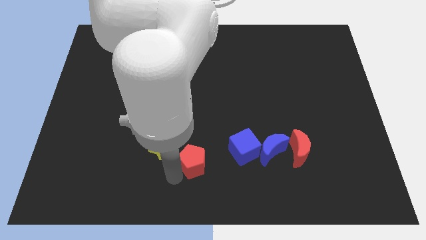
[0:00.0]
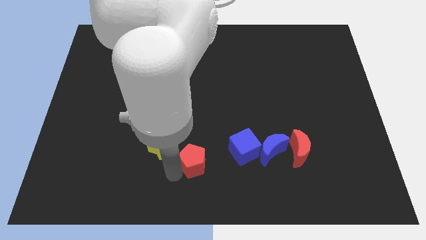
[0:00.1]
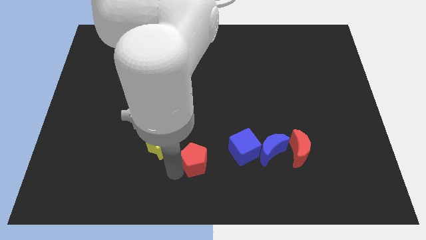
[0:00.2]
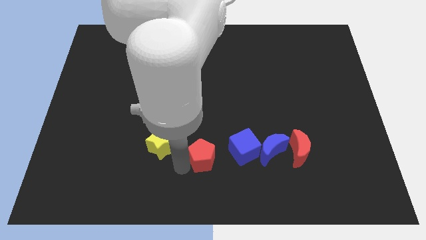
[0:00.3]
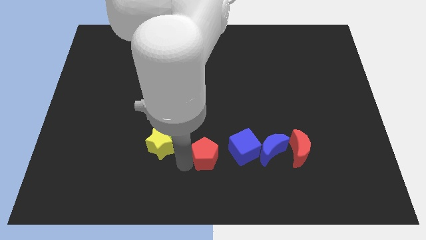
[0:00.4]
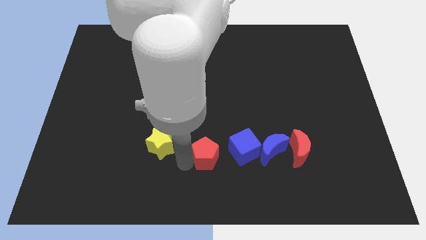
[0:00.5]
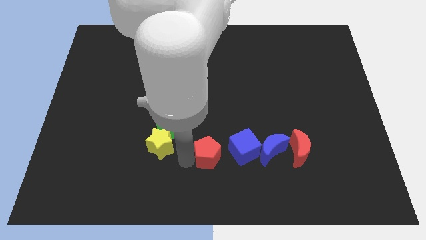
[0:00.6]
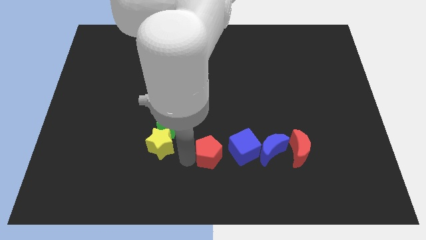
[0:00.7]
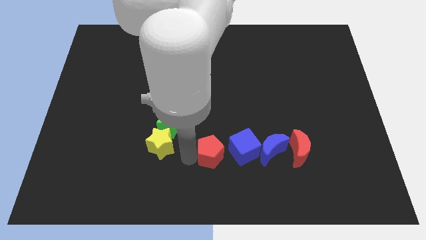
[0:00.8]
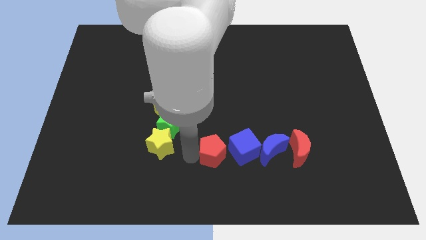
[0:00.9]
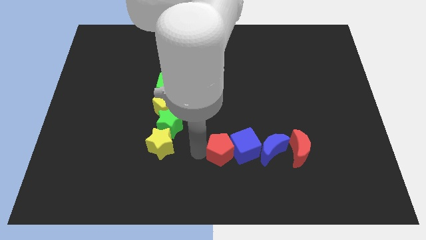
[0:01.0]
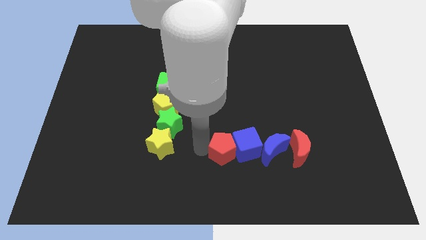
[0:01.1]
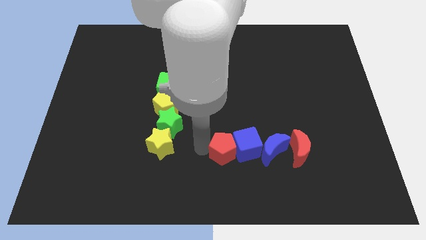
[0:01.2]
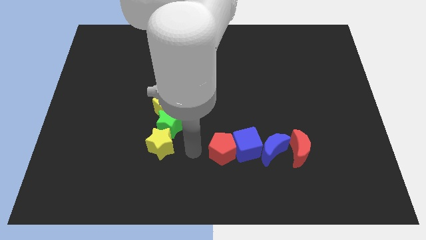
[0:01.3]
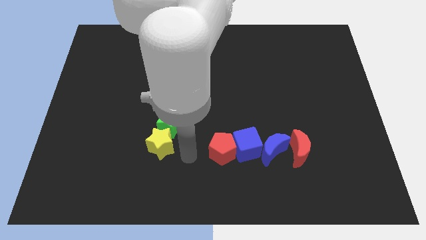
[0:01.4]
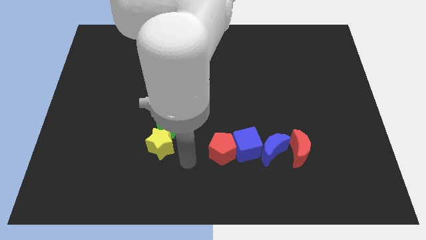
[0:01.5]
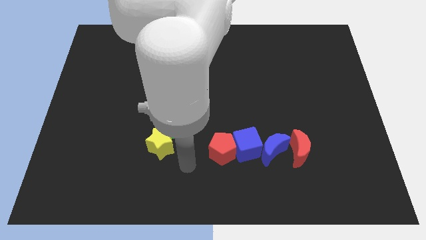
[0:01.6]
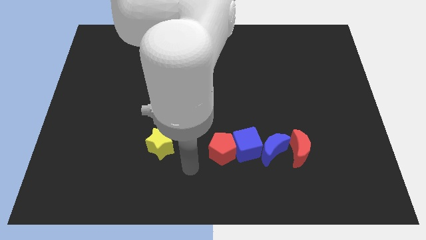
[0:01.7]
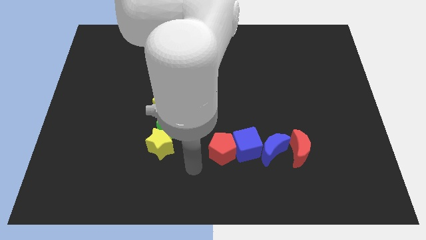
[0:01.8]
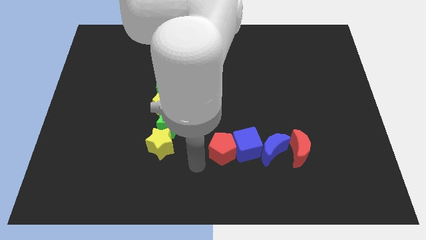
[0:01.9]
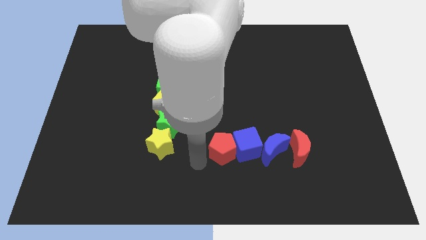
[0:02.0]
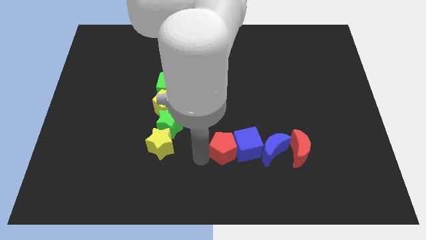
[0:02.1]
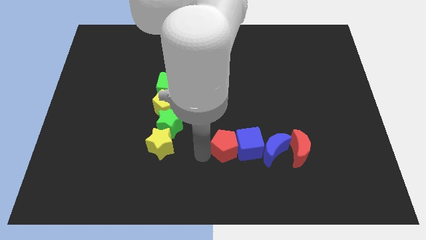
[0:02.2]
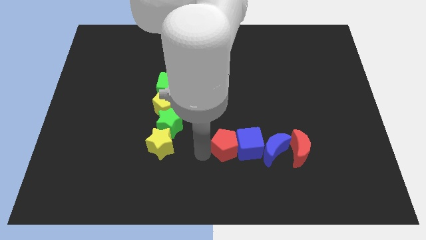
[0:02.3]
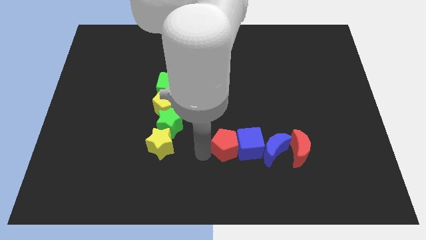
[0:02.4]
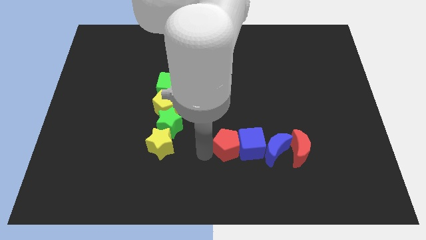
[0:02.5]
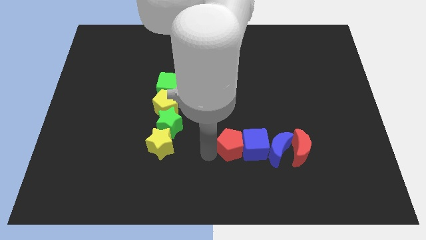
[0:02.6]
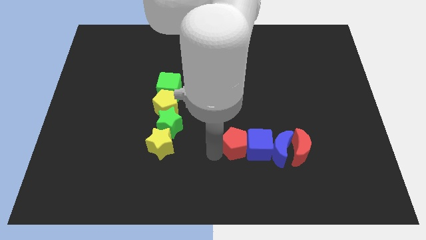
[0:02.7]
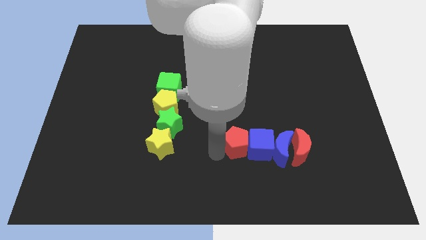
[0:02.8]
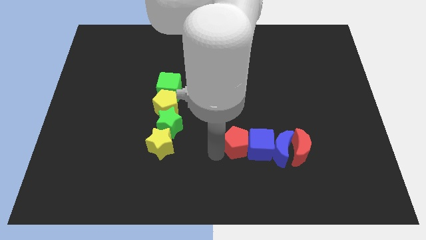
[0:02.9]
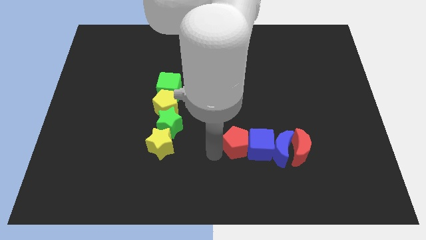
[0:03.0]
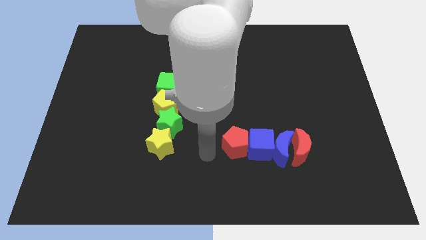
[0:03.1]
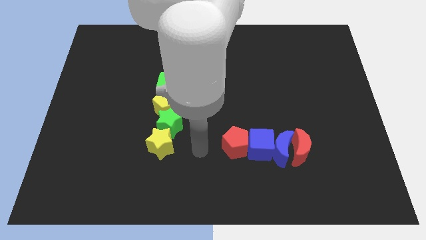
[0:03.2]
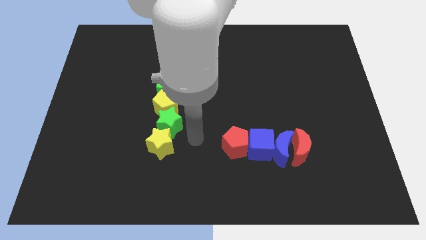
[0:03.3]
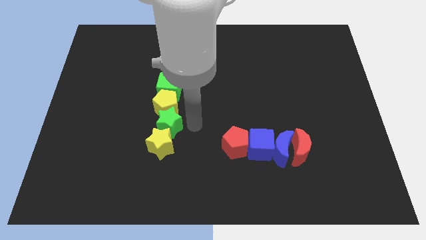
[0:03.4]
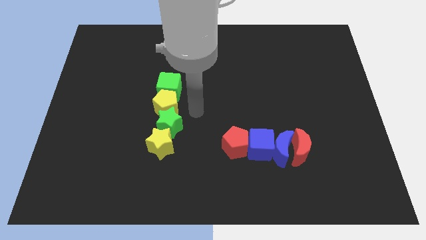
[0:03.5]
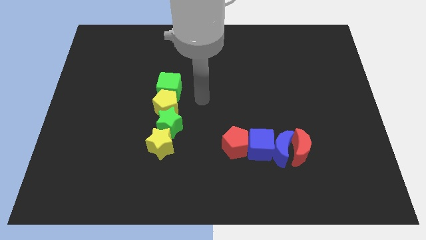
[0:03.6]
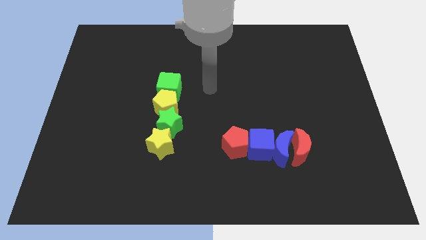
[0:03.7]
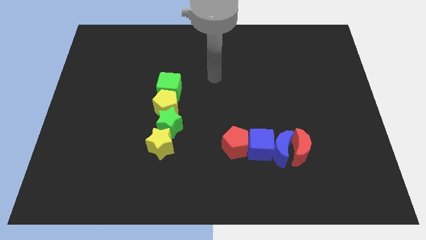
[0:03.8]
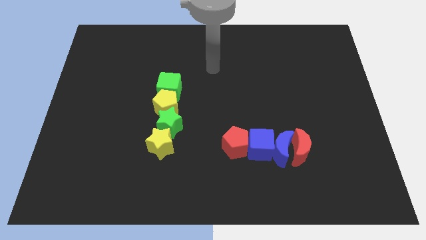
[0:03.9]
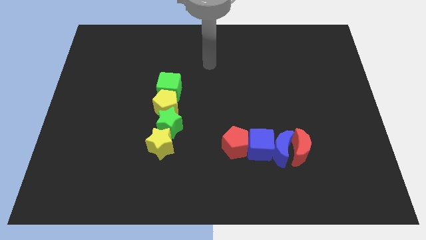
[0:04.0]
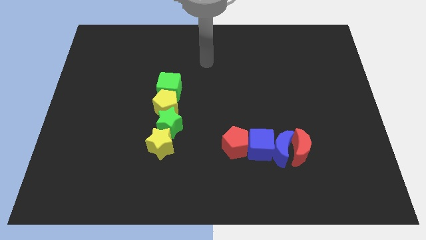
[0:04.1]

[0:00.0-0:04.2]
push the red pentagon to the left of blue cube

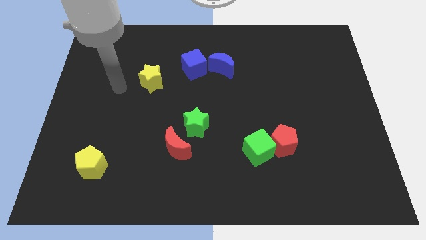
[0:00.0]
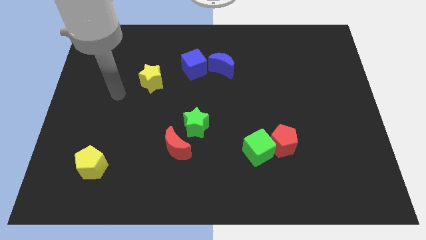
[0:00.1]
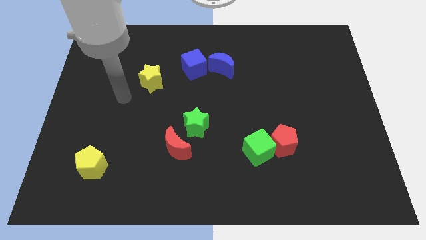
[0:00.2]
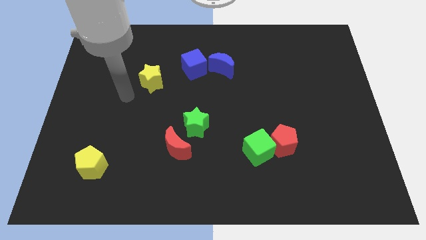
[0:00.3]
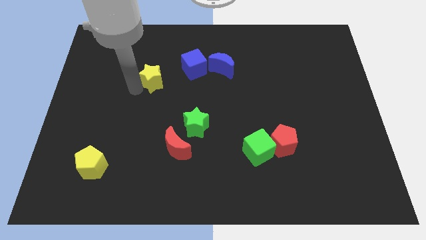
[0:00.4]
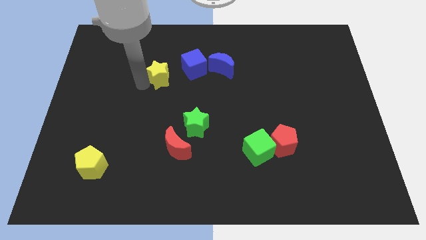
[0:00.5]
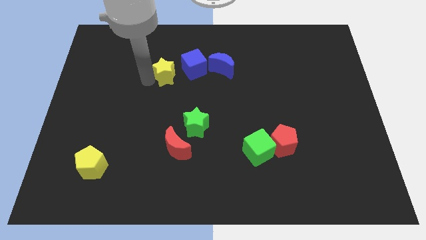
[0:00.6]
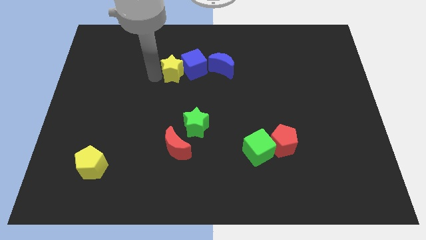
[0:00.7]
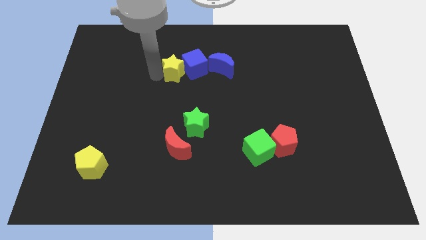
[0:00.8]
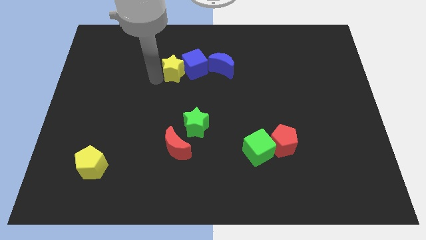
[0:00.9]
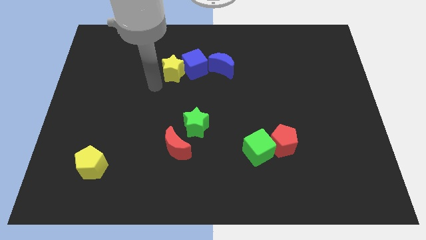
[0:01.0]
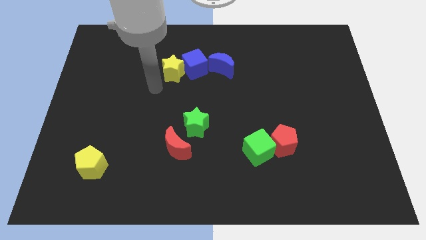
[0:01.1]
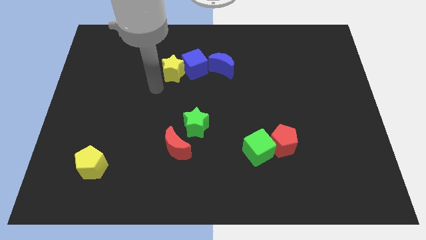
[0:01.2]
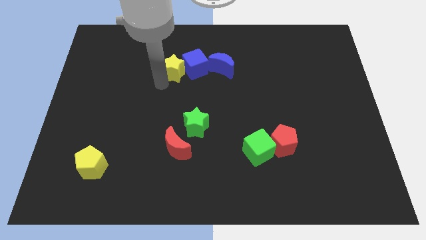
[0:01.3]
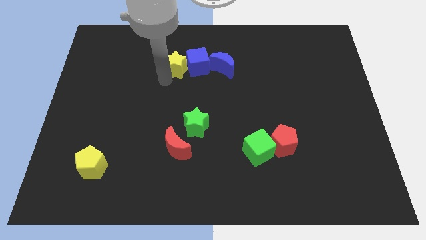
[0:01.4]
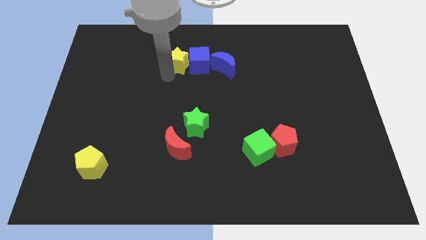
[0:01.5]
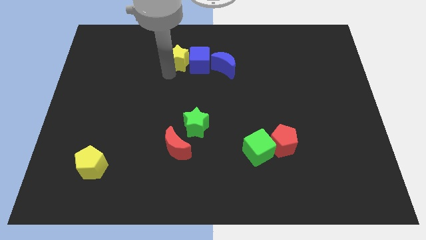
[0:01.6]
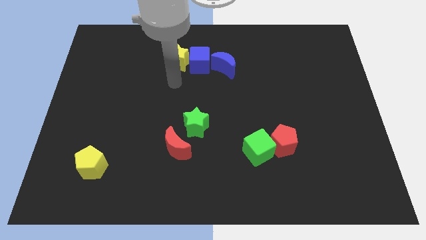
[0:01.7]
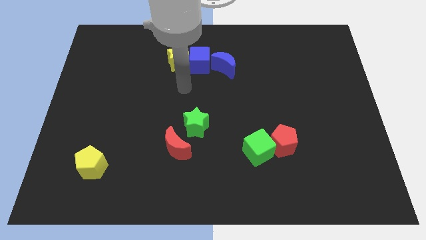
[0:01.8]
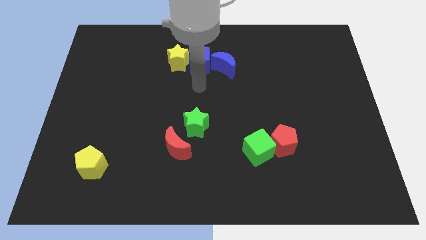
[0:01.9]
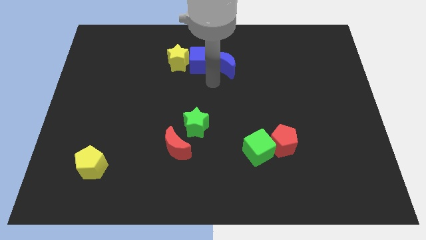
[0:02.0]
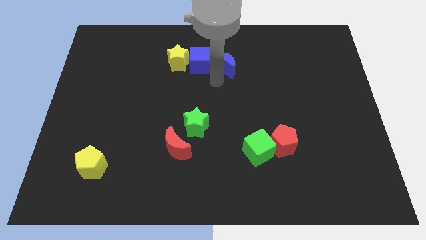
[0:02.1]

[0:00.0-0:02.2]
place the yellow star towards the left of the blue cube

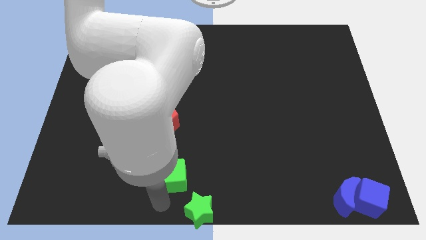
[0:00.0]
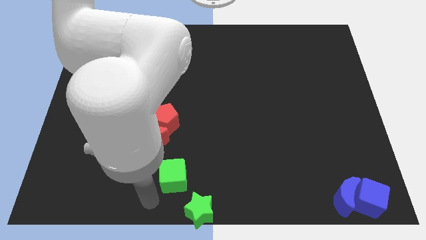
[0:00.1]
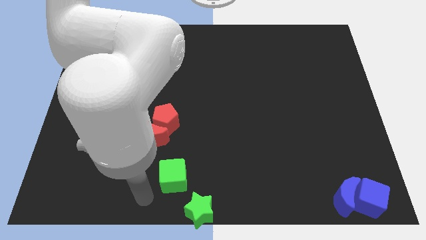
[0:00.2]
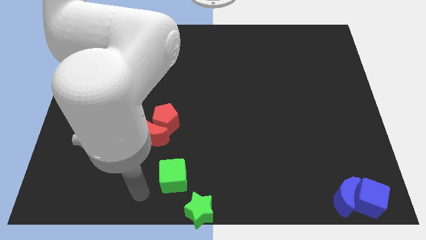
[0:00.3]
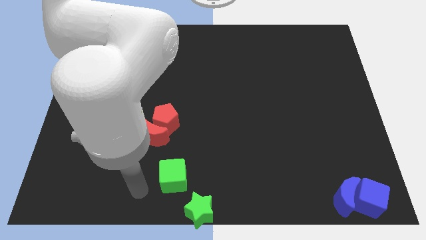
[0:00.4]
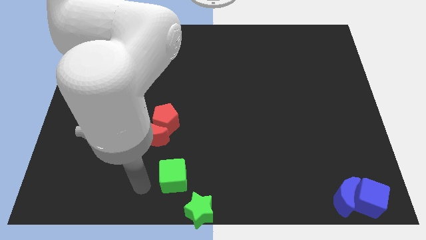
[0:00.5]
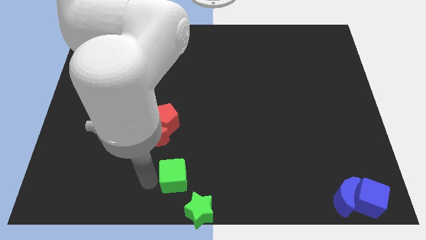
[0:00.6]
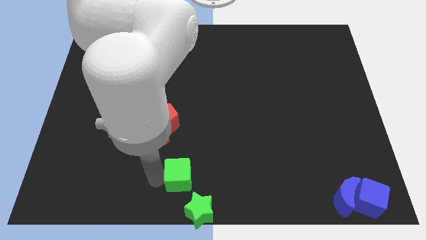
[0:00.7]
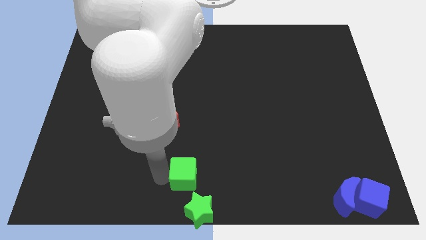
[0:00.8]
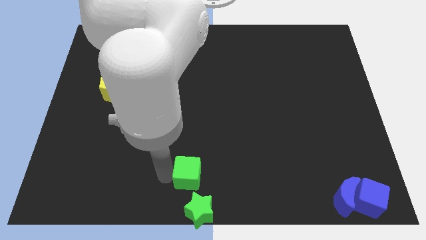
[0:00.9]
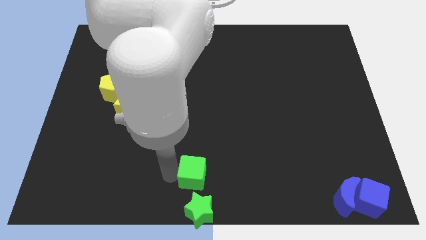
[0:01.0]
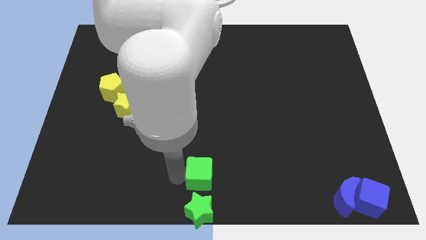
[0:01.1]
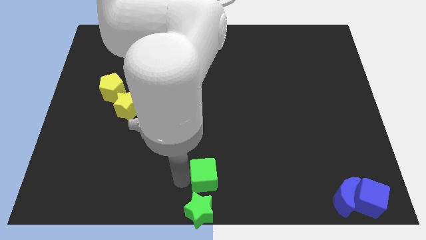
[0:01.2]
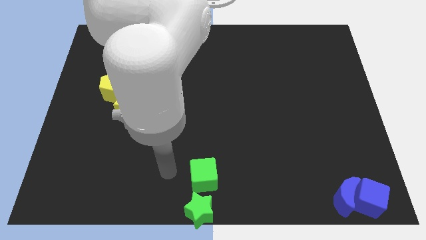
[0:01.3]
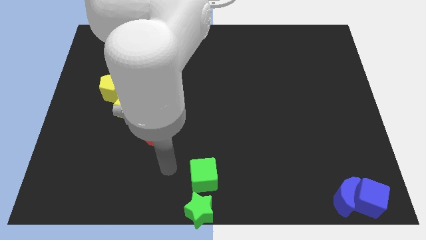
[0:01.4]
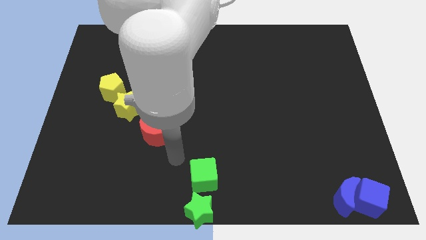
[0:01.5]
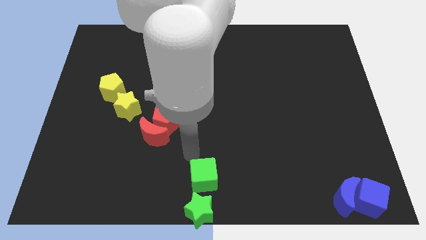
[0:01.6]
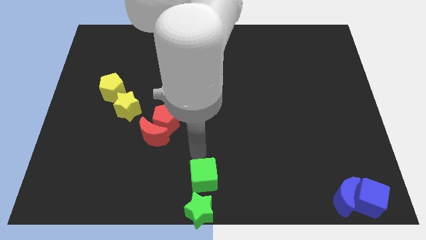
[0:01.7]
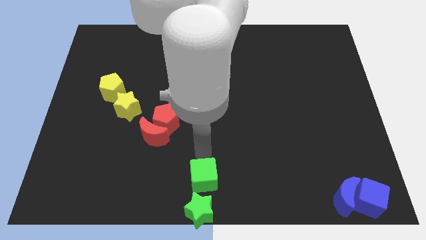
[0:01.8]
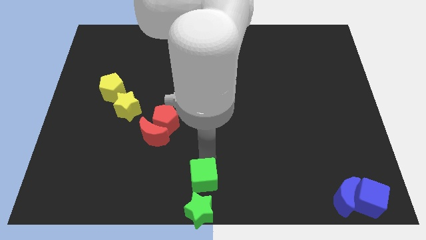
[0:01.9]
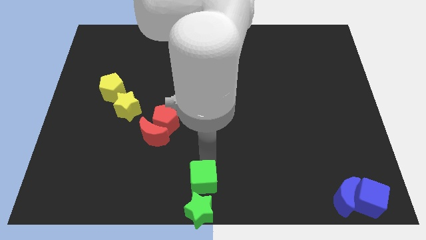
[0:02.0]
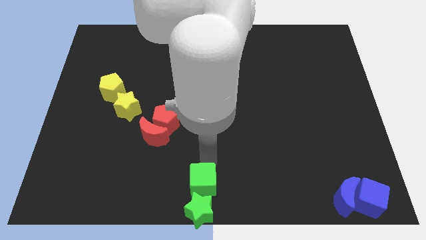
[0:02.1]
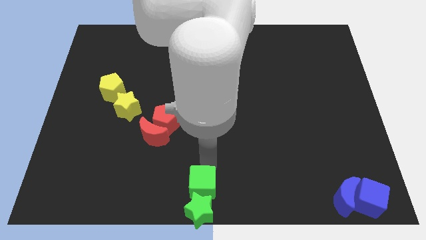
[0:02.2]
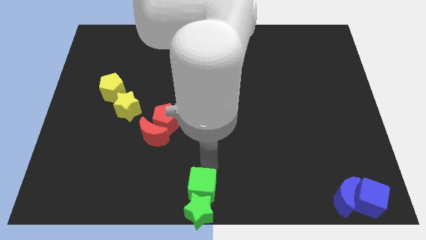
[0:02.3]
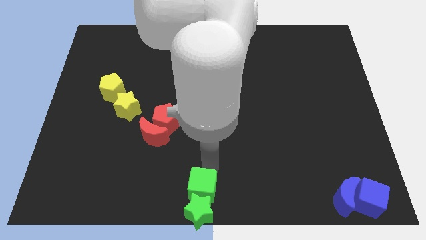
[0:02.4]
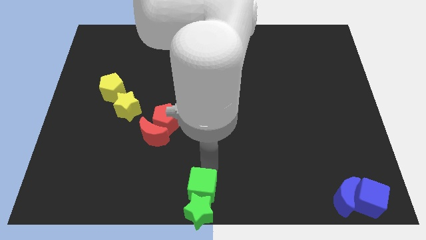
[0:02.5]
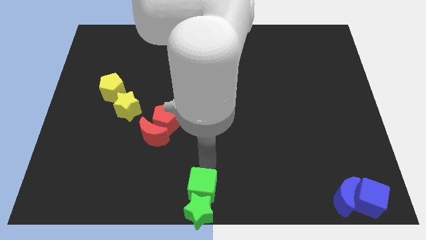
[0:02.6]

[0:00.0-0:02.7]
push the green cube along with the green star at the bottom center of the board
